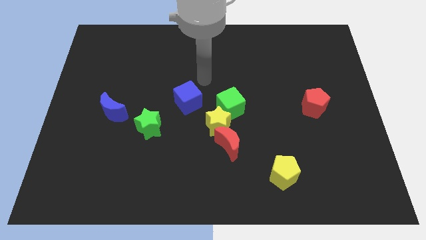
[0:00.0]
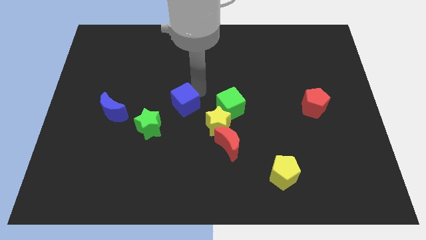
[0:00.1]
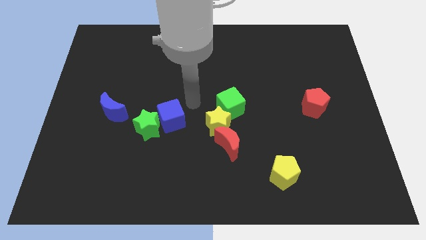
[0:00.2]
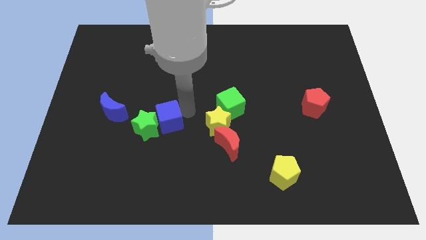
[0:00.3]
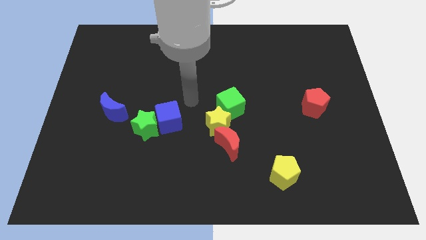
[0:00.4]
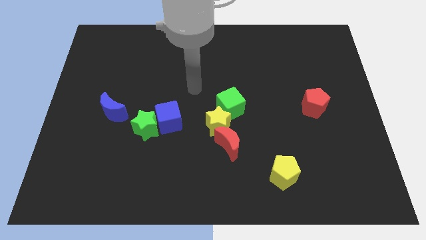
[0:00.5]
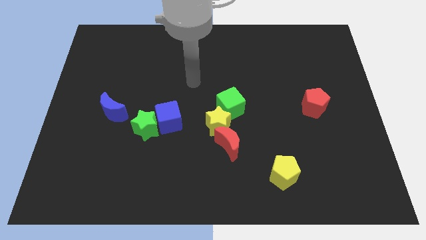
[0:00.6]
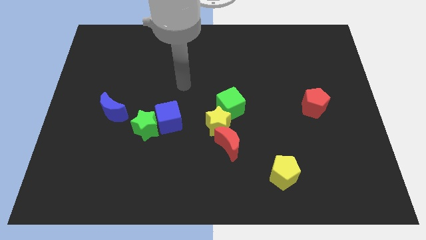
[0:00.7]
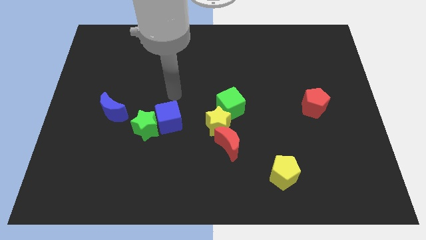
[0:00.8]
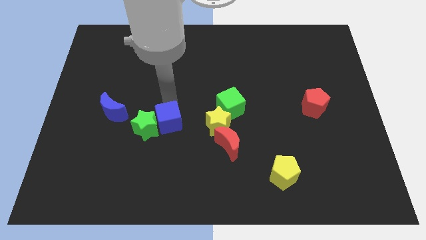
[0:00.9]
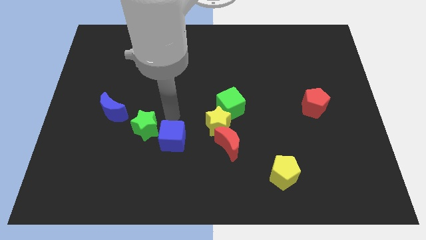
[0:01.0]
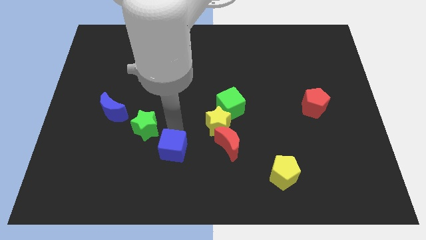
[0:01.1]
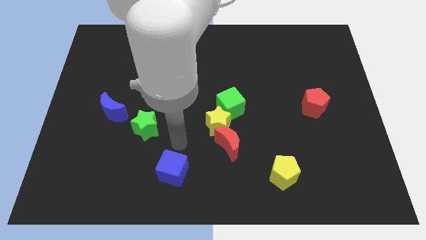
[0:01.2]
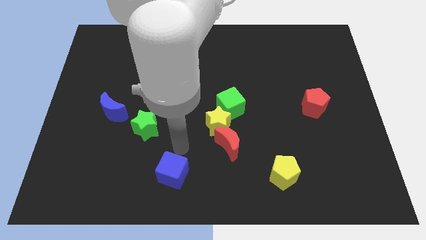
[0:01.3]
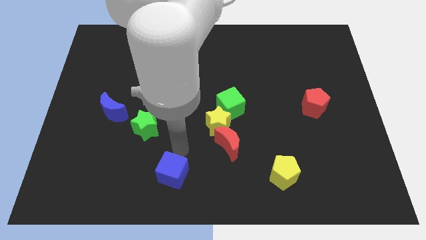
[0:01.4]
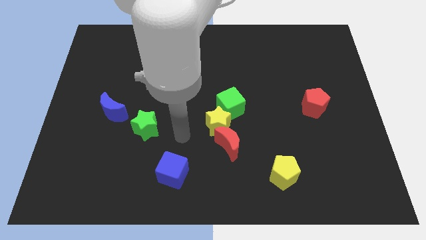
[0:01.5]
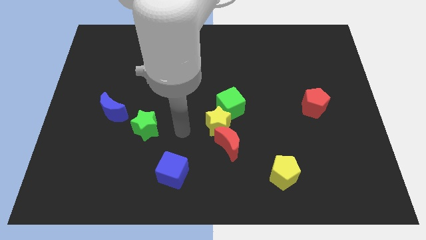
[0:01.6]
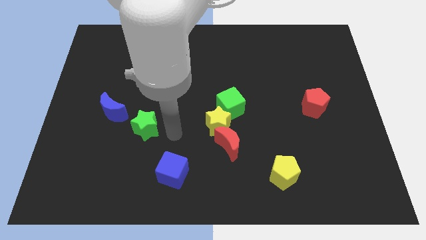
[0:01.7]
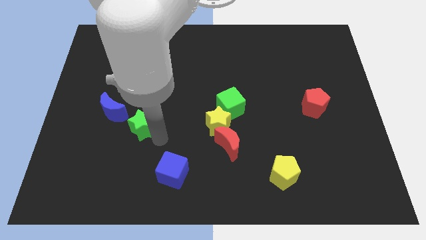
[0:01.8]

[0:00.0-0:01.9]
push the blue cube towards the down of the board

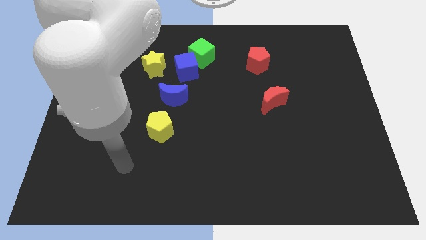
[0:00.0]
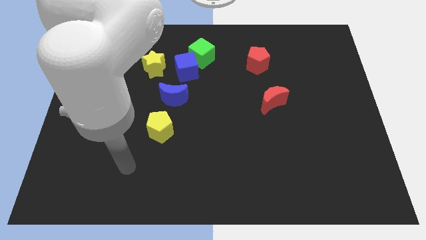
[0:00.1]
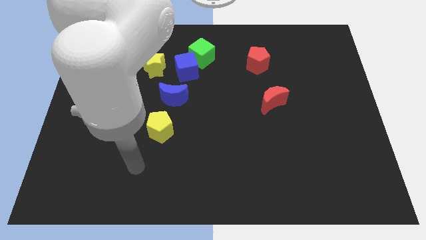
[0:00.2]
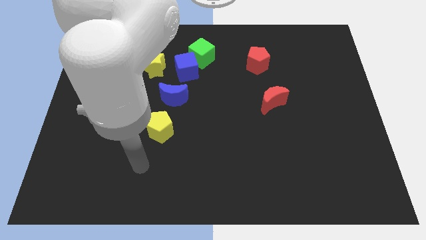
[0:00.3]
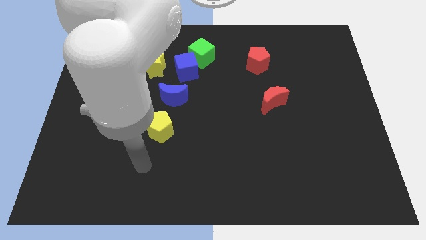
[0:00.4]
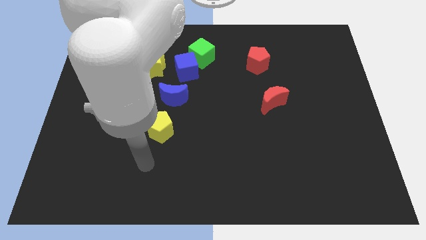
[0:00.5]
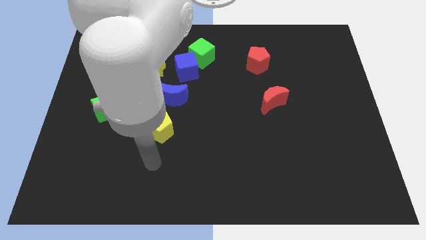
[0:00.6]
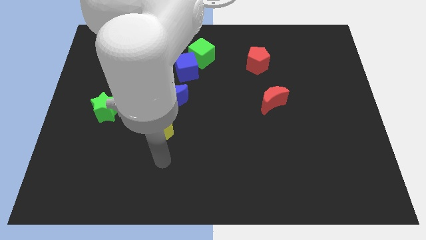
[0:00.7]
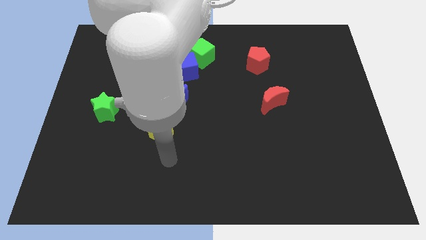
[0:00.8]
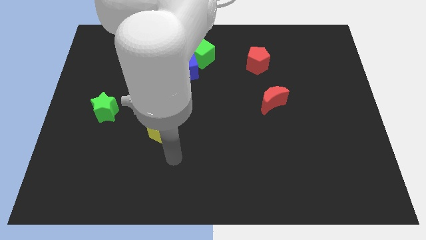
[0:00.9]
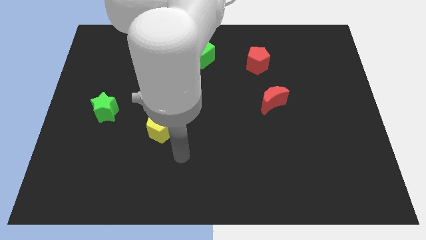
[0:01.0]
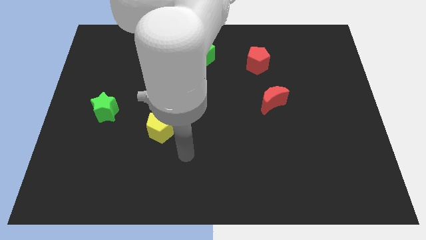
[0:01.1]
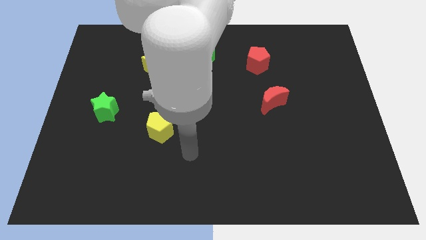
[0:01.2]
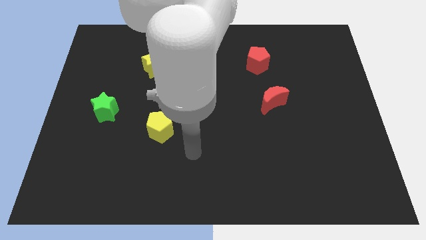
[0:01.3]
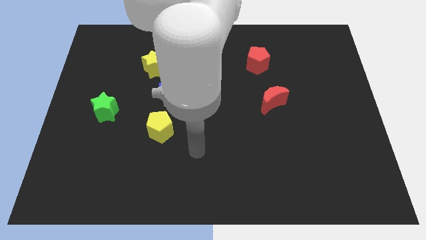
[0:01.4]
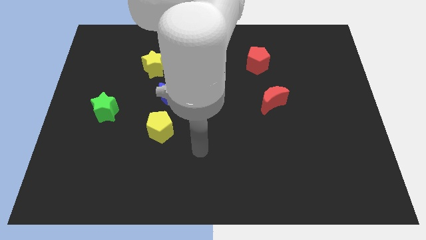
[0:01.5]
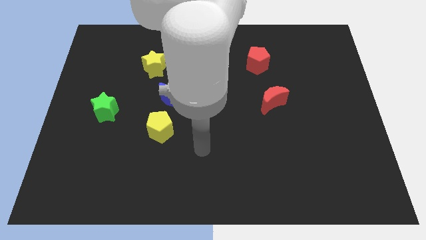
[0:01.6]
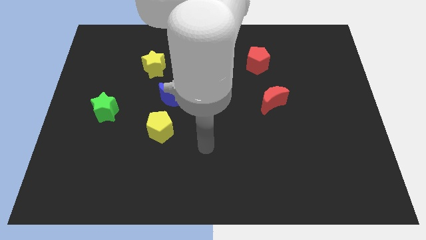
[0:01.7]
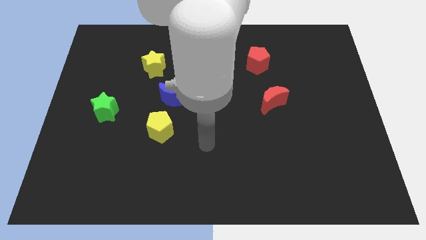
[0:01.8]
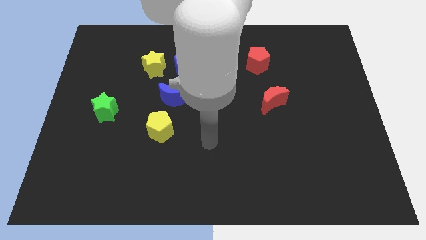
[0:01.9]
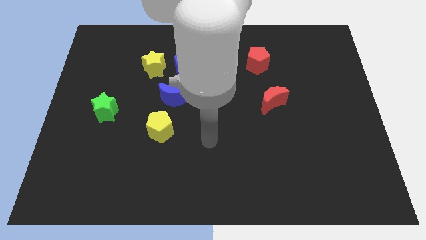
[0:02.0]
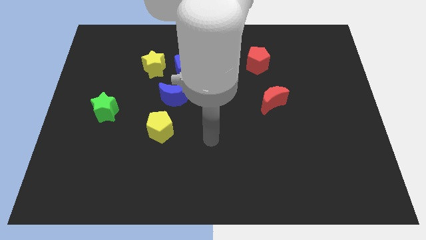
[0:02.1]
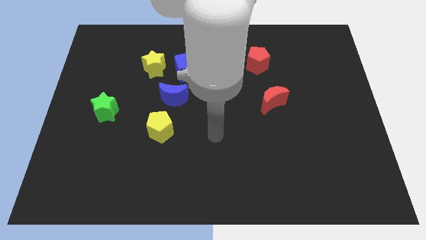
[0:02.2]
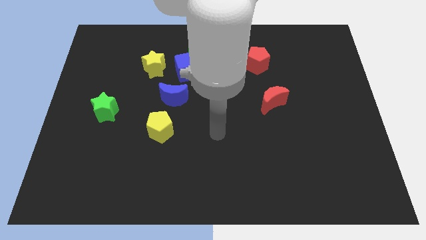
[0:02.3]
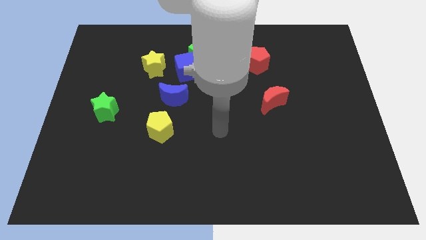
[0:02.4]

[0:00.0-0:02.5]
place your hand at right side of the yellow pentagon

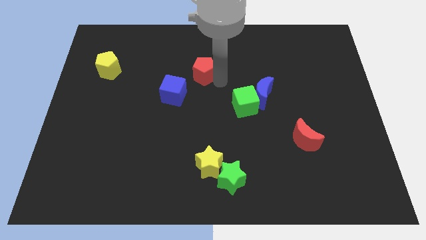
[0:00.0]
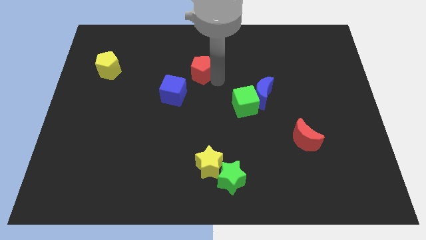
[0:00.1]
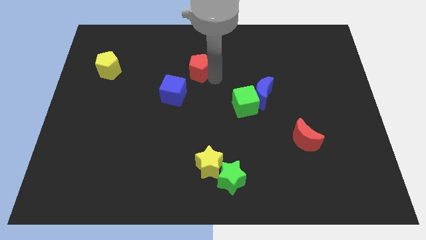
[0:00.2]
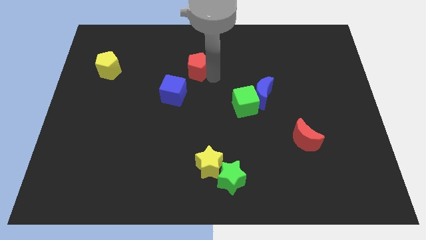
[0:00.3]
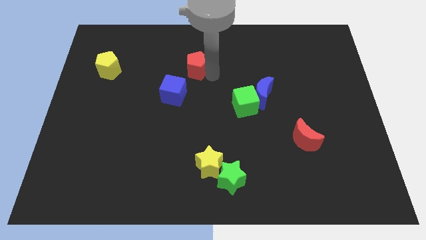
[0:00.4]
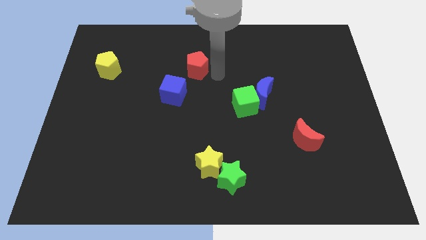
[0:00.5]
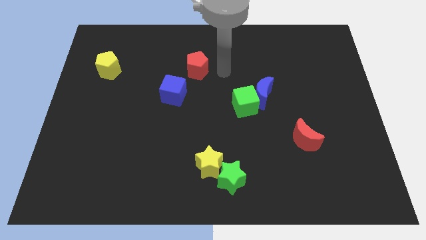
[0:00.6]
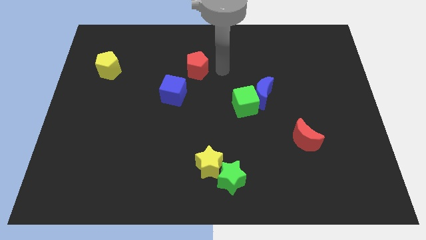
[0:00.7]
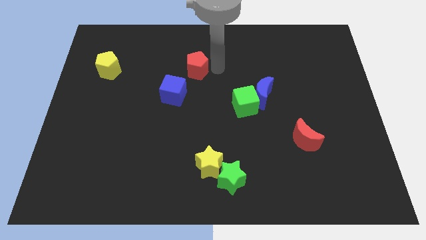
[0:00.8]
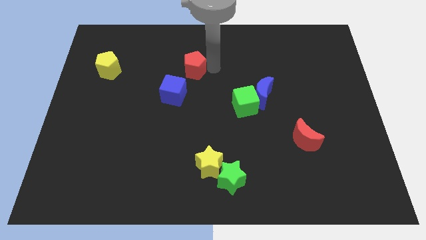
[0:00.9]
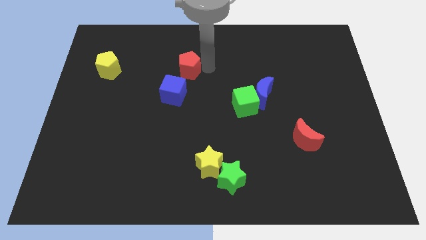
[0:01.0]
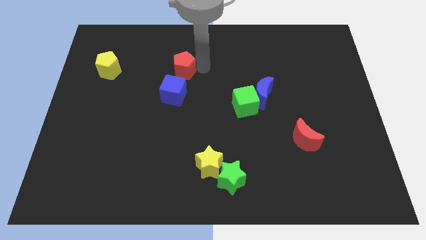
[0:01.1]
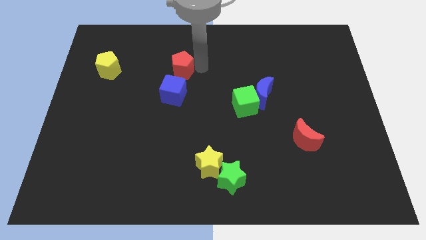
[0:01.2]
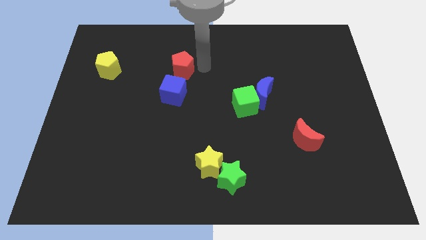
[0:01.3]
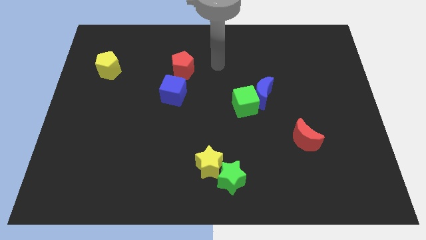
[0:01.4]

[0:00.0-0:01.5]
push the red pentagon to the top of the blue cube

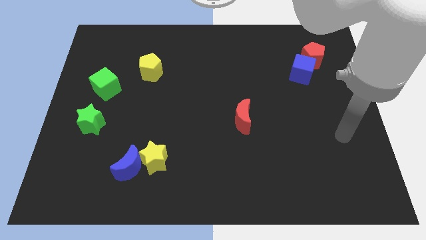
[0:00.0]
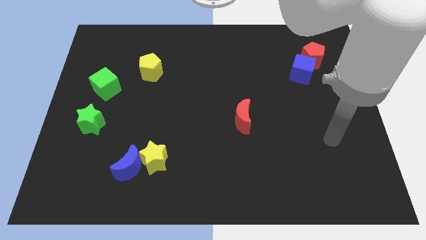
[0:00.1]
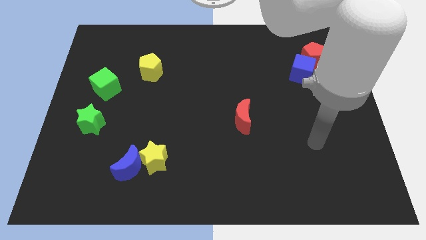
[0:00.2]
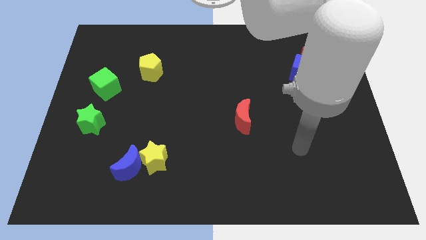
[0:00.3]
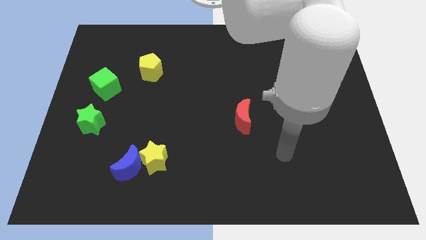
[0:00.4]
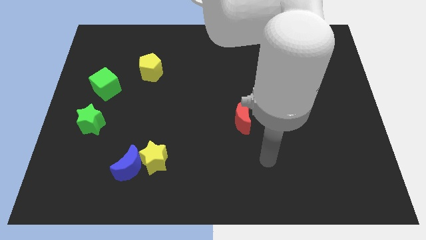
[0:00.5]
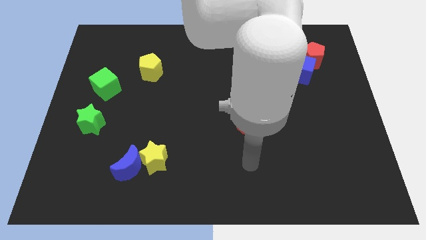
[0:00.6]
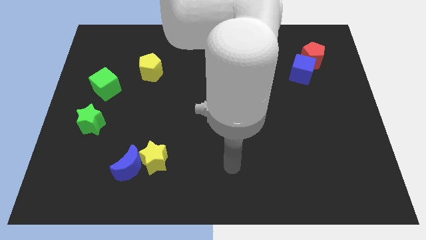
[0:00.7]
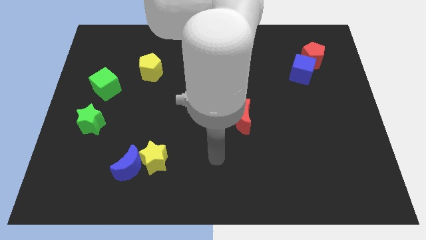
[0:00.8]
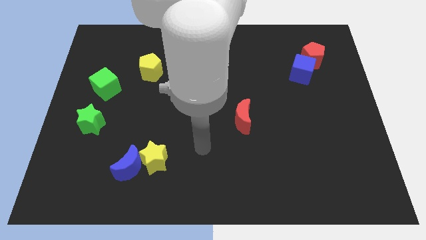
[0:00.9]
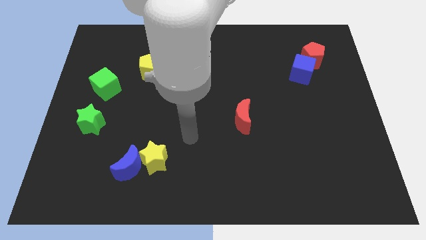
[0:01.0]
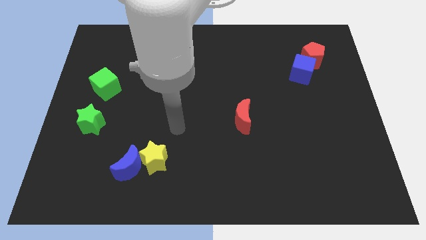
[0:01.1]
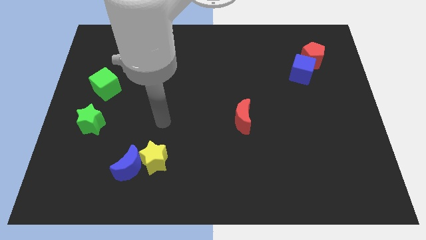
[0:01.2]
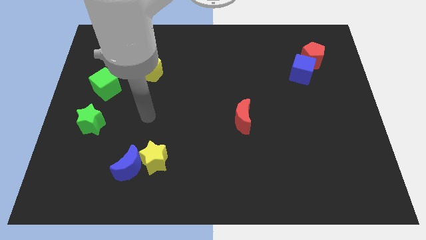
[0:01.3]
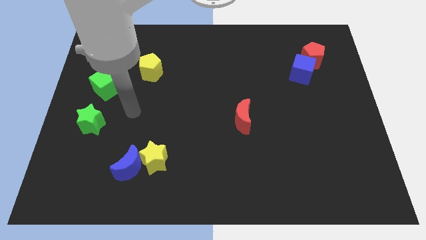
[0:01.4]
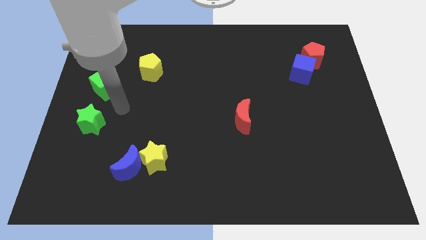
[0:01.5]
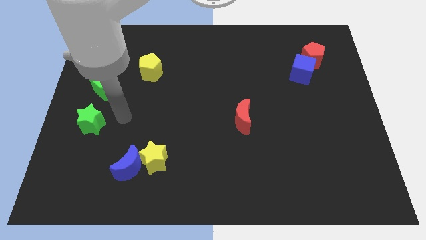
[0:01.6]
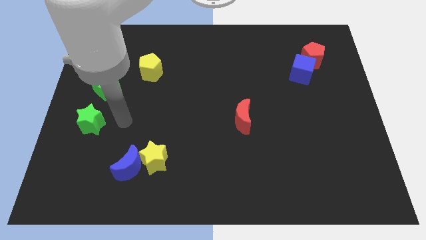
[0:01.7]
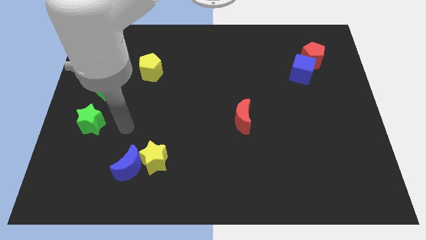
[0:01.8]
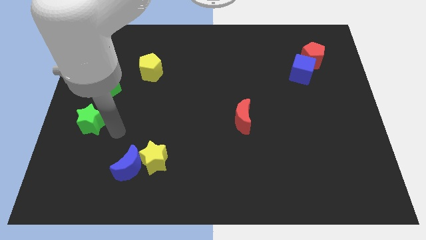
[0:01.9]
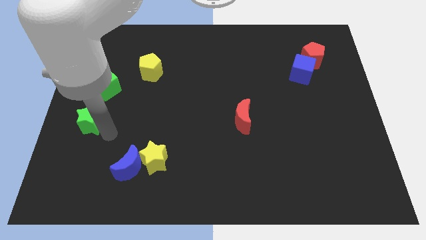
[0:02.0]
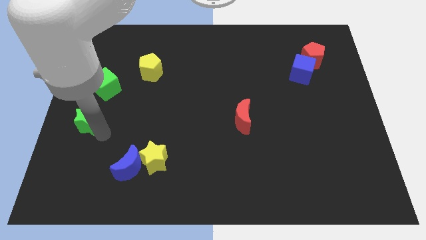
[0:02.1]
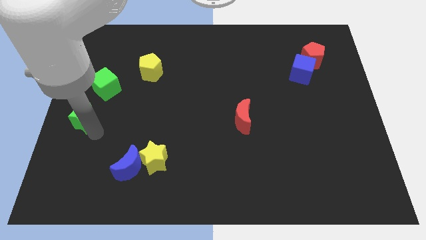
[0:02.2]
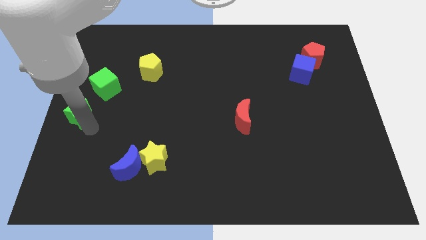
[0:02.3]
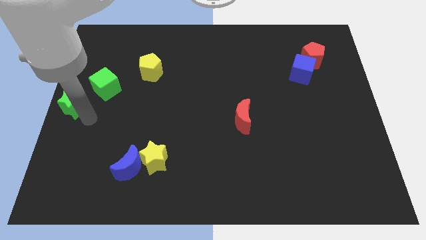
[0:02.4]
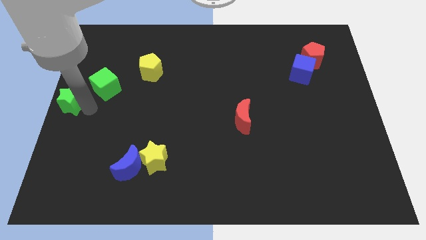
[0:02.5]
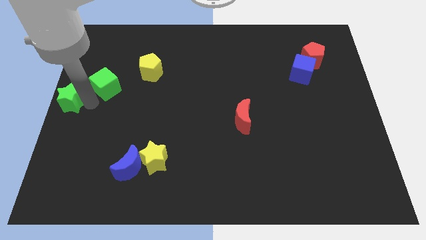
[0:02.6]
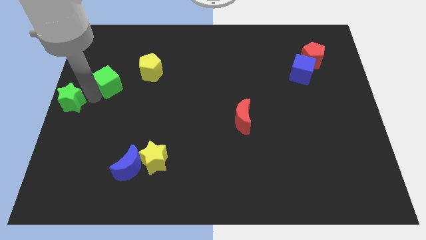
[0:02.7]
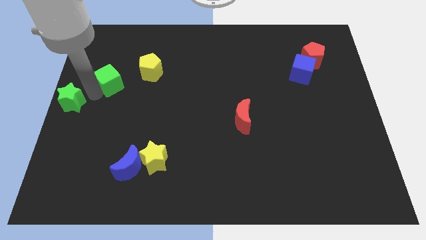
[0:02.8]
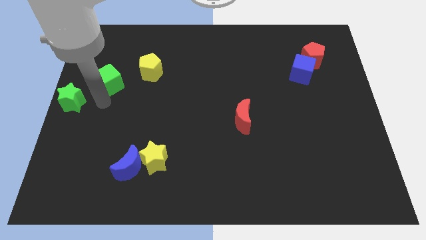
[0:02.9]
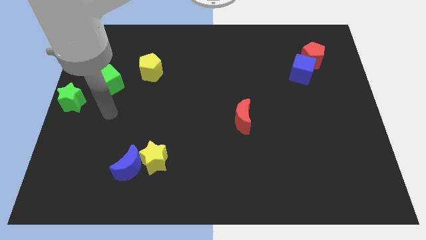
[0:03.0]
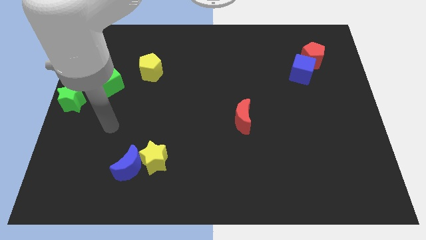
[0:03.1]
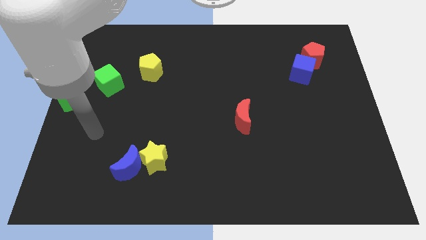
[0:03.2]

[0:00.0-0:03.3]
place the green star at the center left side of the board

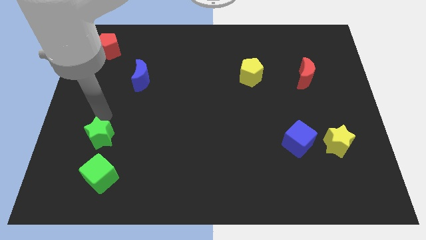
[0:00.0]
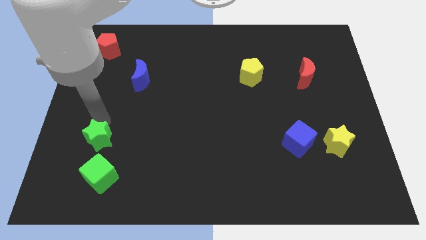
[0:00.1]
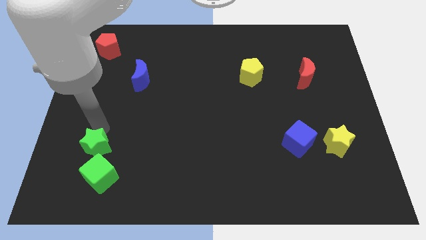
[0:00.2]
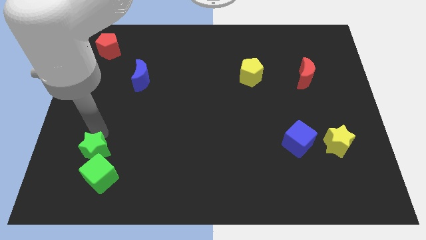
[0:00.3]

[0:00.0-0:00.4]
place the green cube to the top of green star
